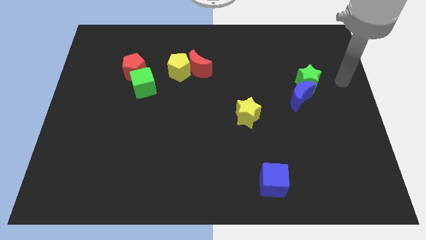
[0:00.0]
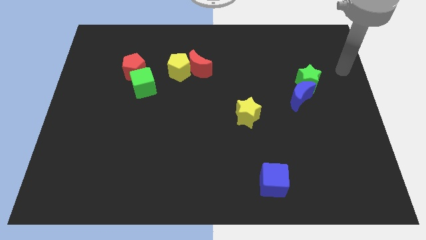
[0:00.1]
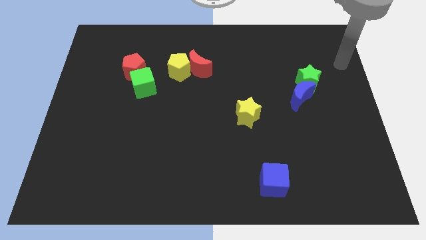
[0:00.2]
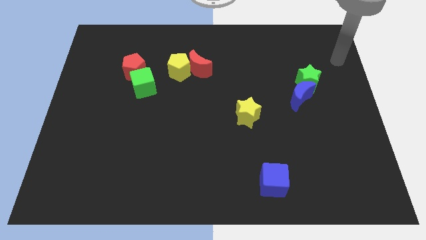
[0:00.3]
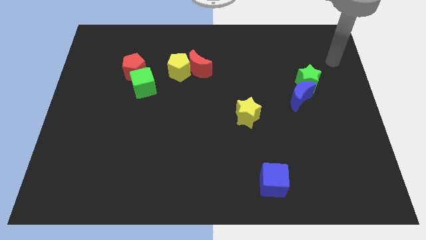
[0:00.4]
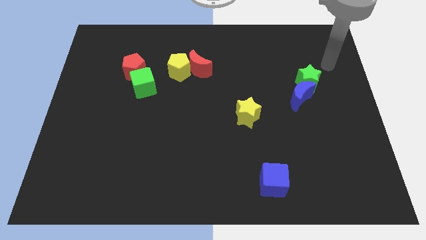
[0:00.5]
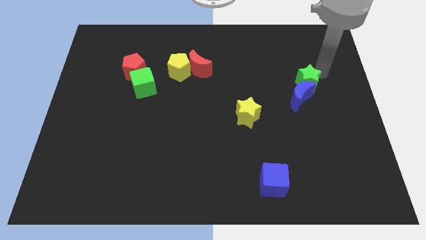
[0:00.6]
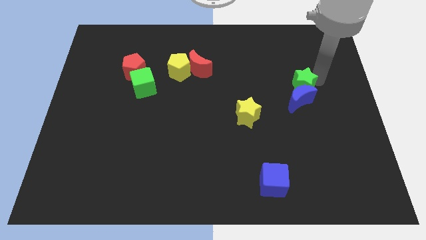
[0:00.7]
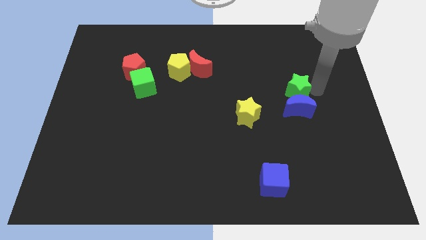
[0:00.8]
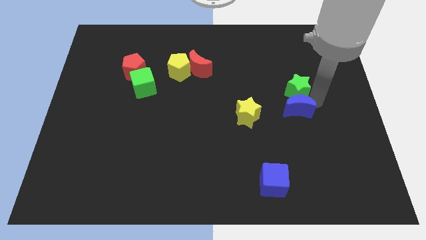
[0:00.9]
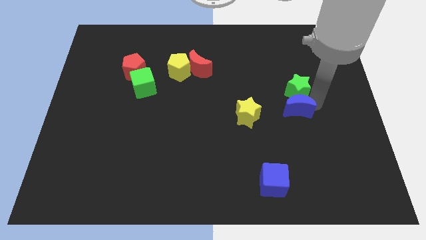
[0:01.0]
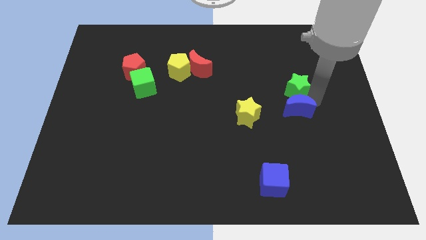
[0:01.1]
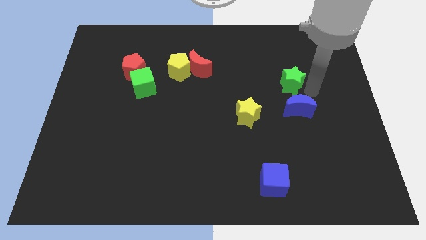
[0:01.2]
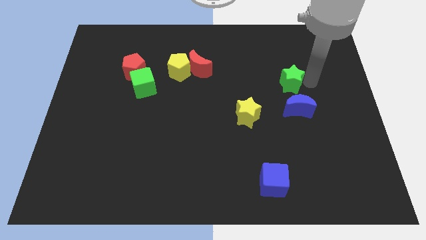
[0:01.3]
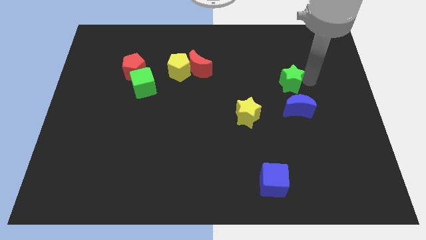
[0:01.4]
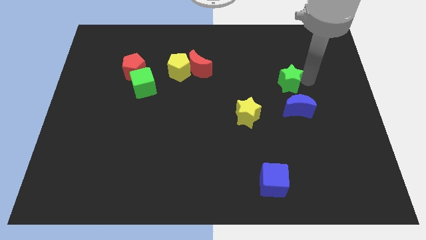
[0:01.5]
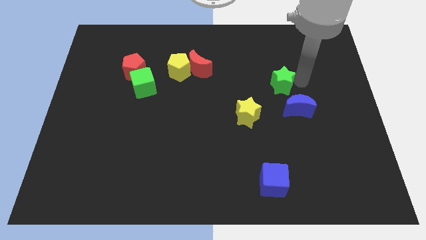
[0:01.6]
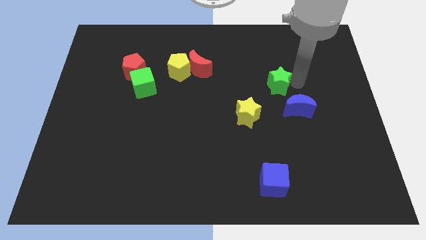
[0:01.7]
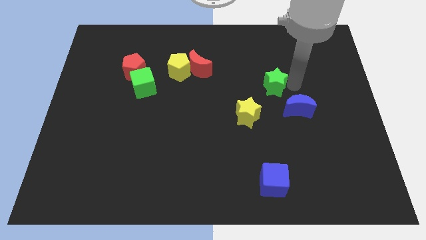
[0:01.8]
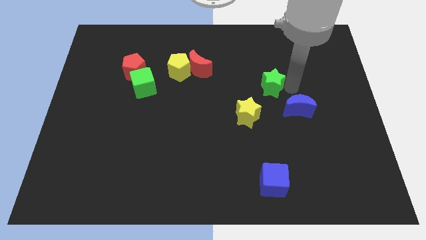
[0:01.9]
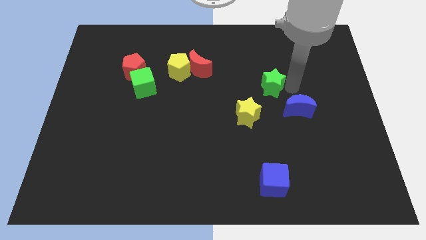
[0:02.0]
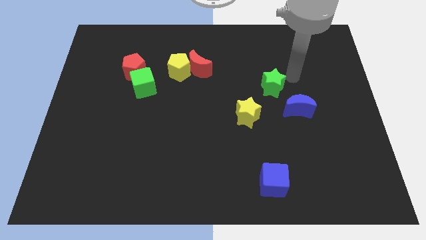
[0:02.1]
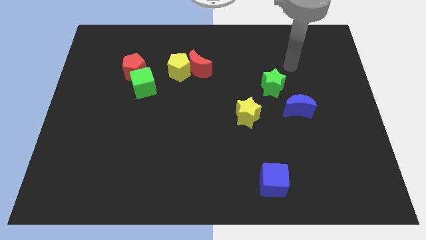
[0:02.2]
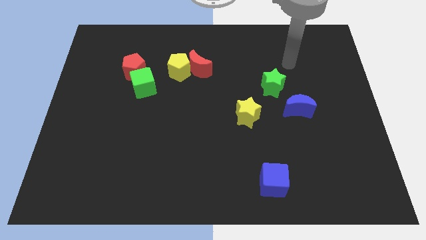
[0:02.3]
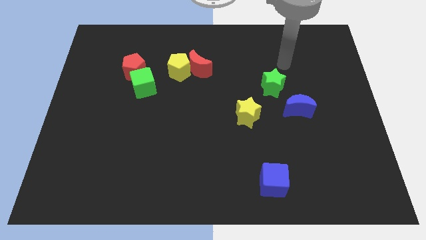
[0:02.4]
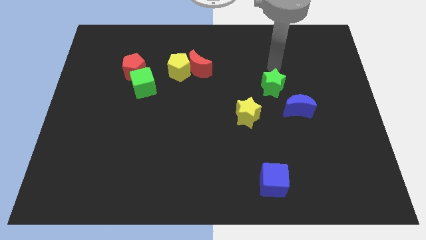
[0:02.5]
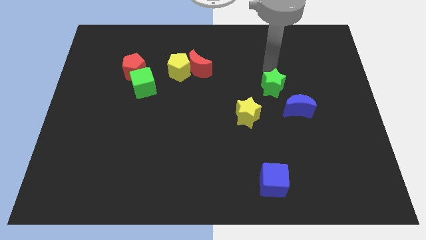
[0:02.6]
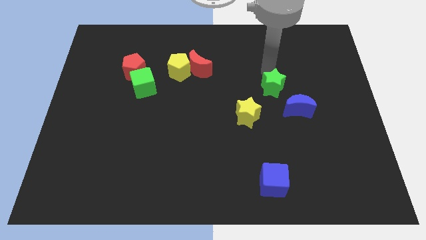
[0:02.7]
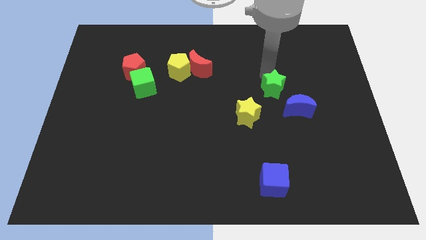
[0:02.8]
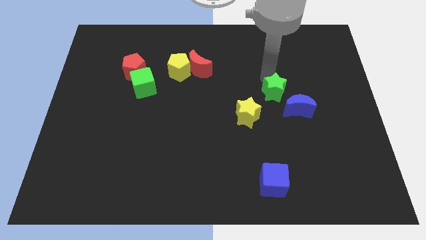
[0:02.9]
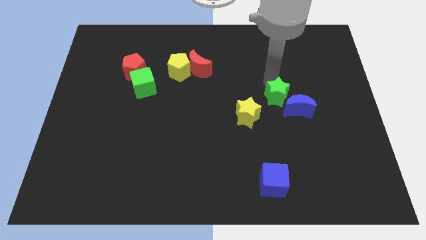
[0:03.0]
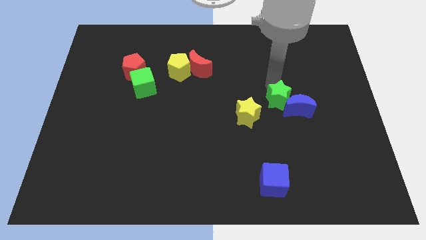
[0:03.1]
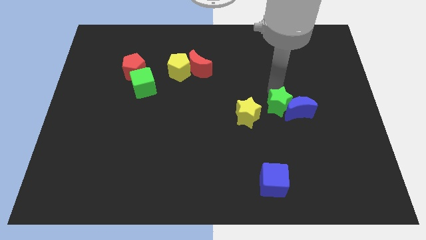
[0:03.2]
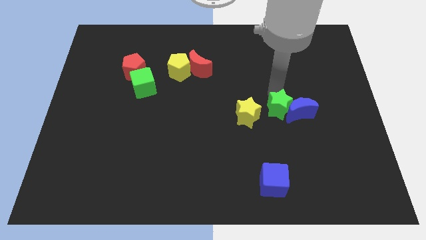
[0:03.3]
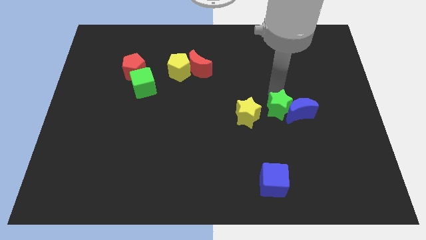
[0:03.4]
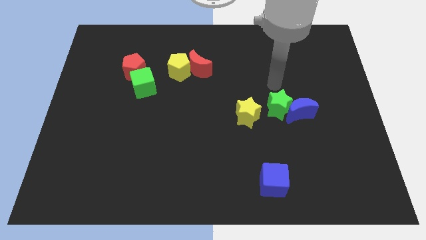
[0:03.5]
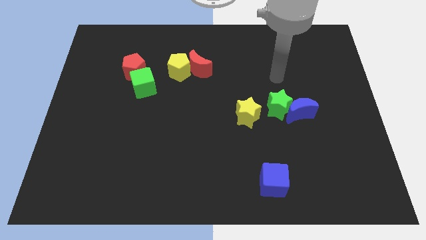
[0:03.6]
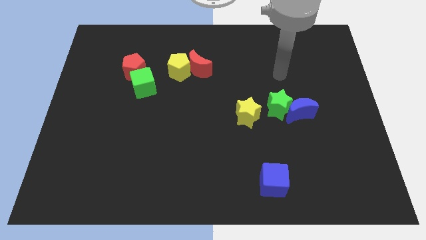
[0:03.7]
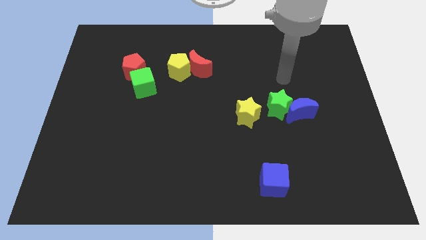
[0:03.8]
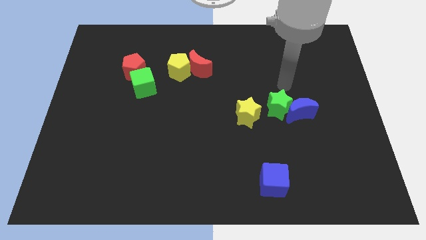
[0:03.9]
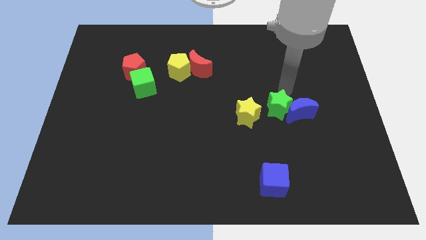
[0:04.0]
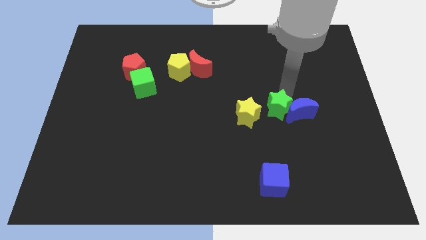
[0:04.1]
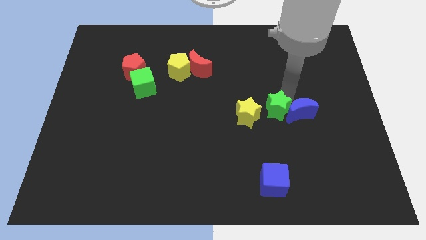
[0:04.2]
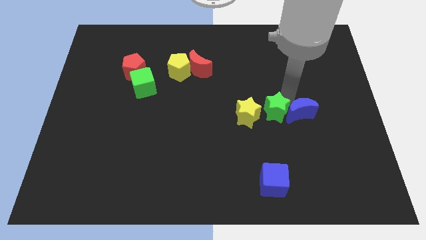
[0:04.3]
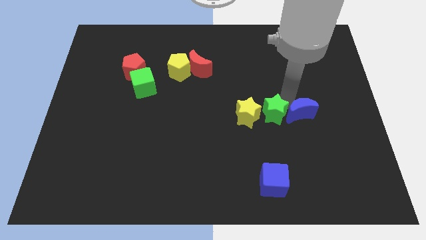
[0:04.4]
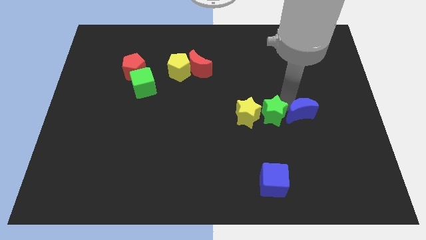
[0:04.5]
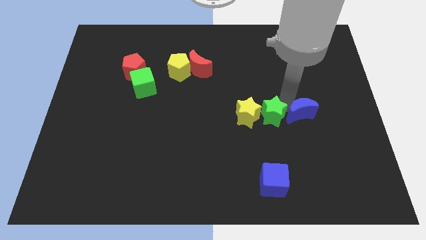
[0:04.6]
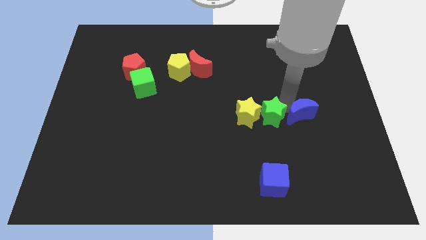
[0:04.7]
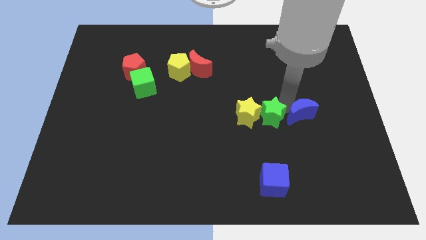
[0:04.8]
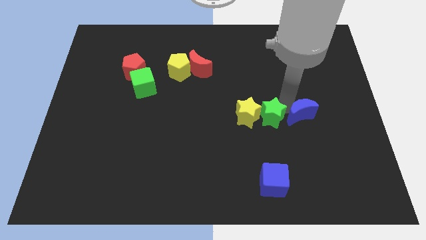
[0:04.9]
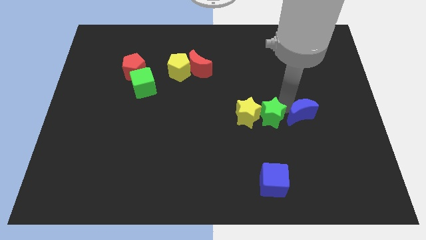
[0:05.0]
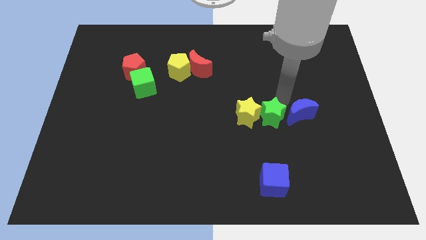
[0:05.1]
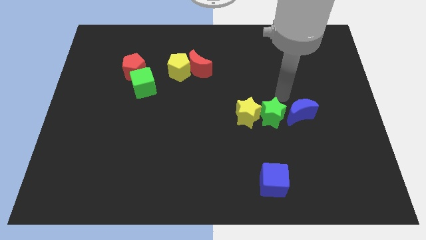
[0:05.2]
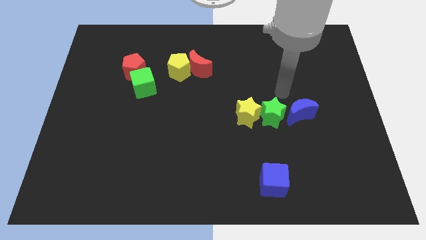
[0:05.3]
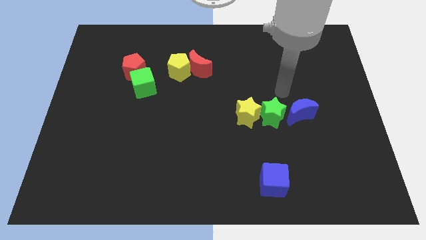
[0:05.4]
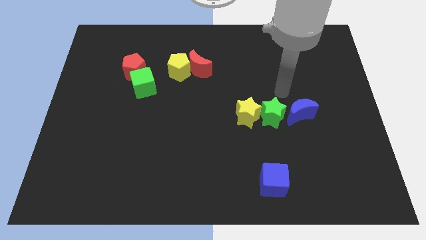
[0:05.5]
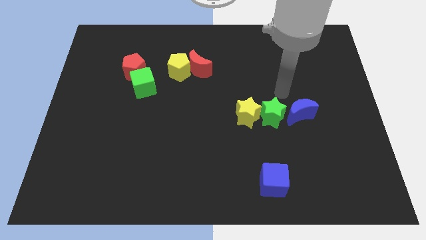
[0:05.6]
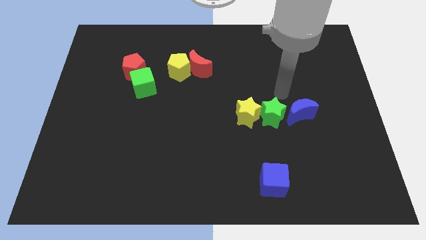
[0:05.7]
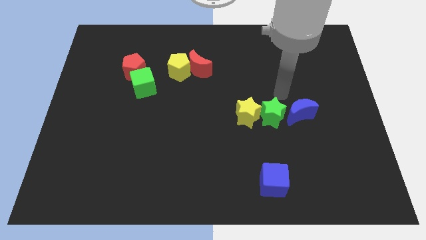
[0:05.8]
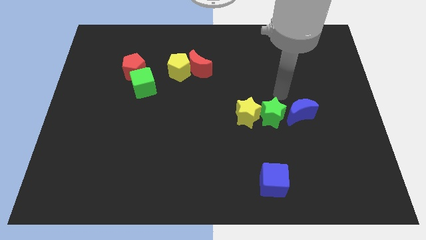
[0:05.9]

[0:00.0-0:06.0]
place the green star in between yellow star and blue moon

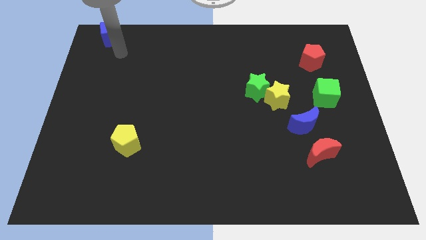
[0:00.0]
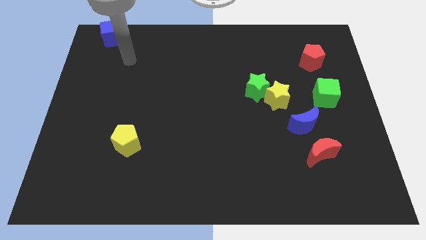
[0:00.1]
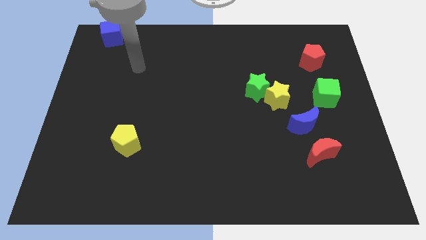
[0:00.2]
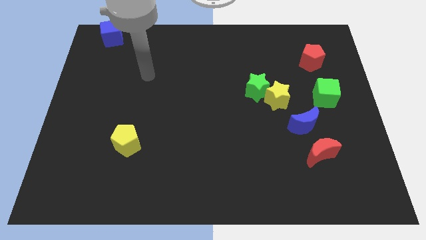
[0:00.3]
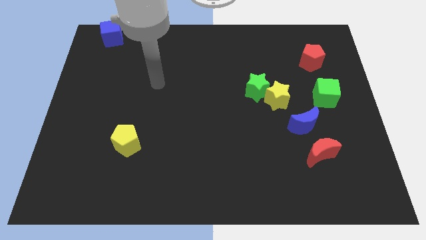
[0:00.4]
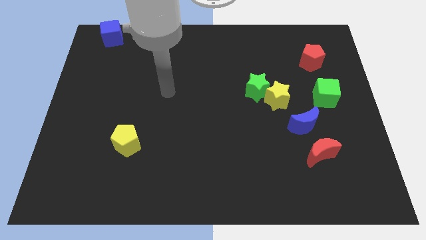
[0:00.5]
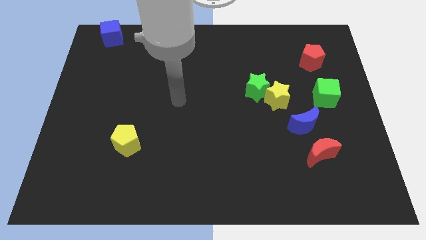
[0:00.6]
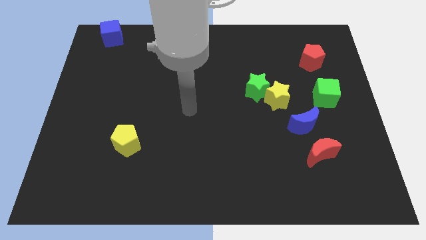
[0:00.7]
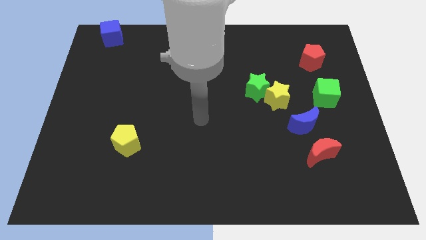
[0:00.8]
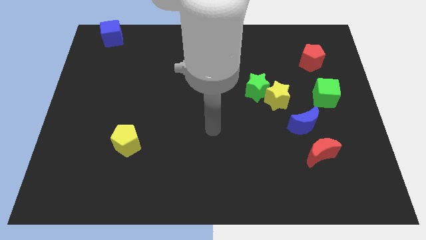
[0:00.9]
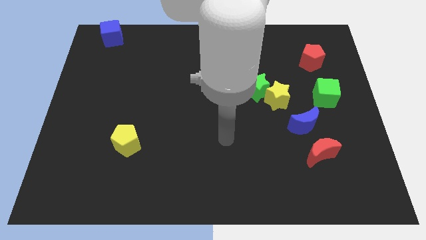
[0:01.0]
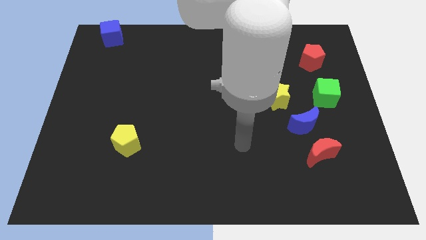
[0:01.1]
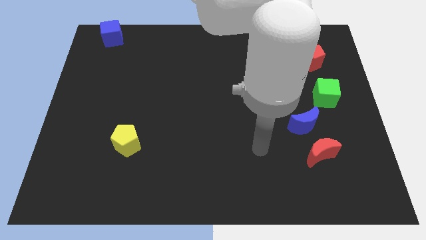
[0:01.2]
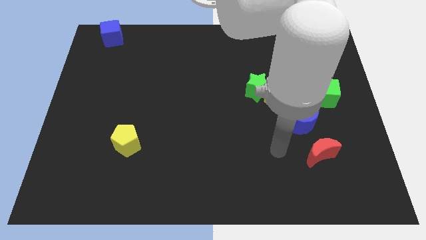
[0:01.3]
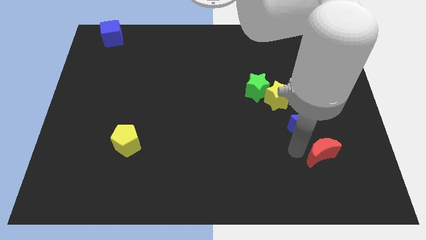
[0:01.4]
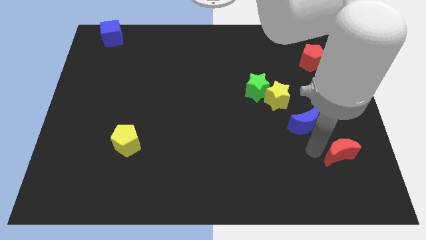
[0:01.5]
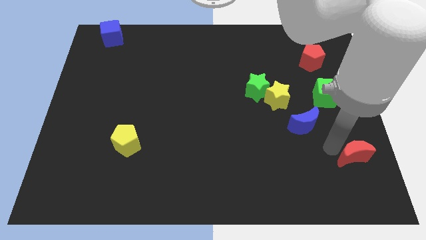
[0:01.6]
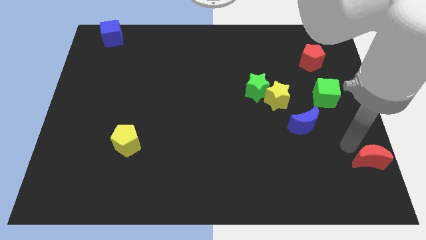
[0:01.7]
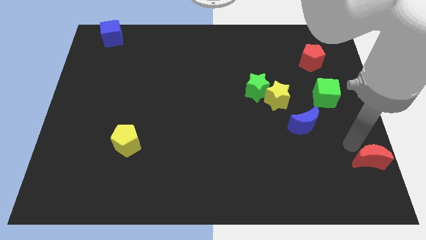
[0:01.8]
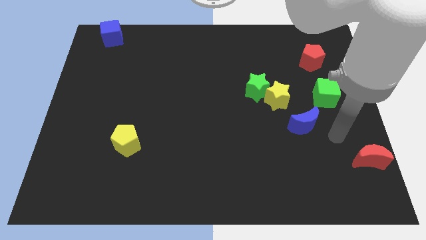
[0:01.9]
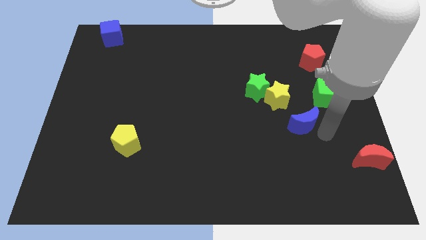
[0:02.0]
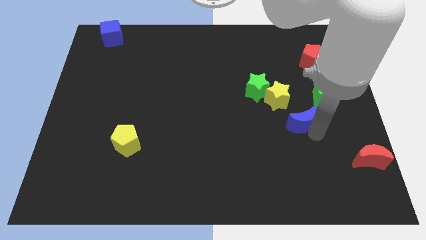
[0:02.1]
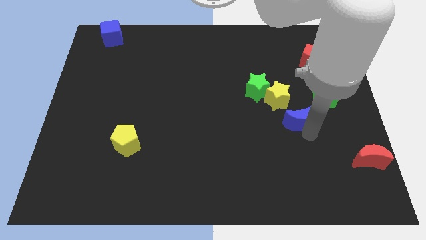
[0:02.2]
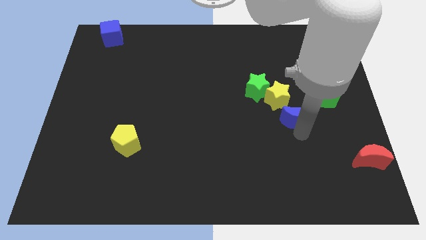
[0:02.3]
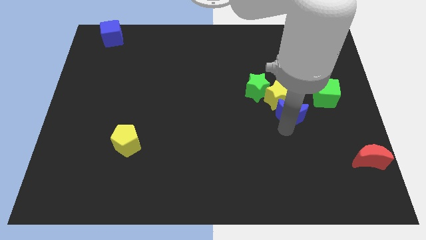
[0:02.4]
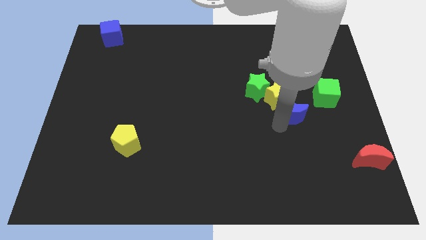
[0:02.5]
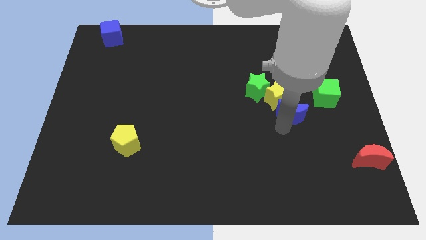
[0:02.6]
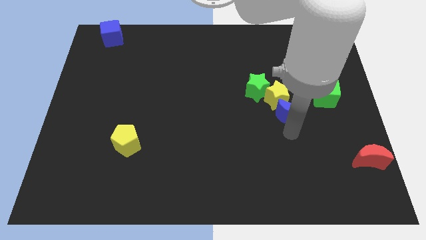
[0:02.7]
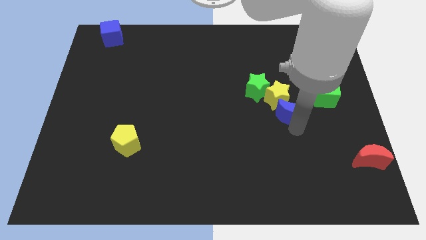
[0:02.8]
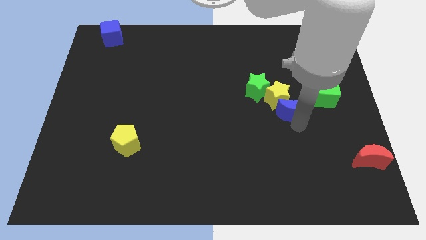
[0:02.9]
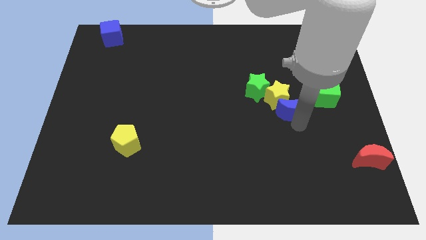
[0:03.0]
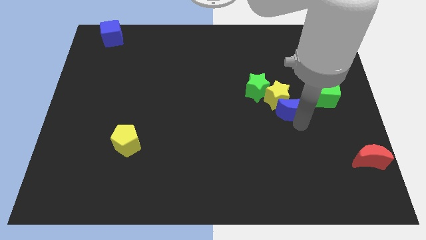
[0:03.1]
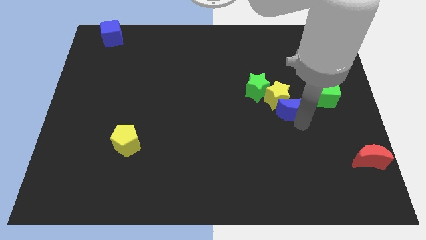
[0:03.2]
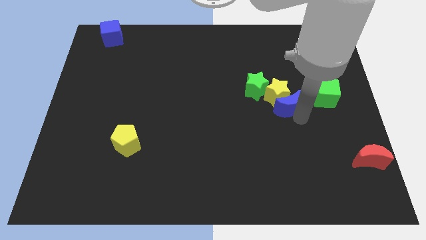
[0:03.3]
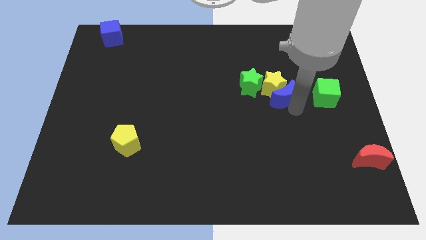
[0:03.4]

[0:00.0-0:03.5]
separate red and blue moon from each other
